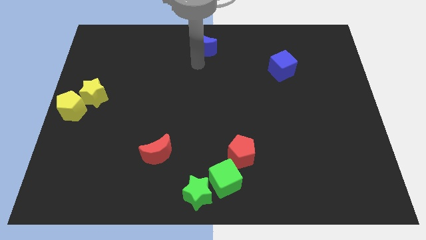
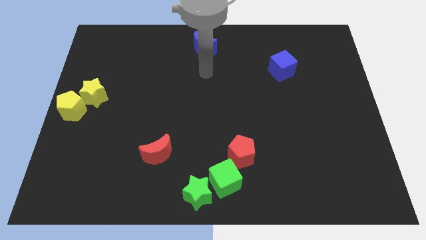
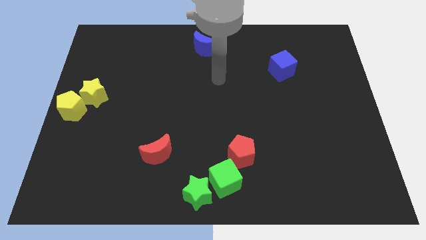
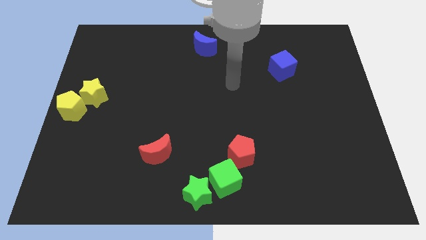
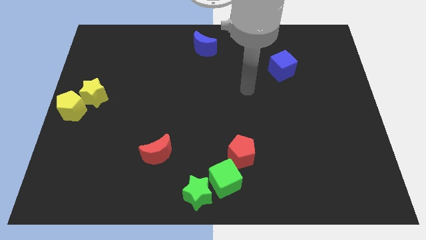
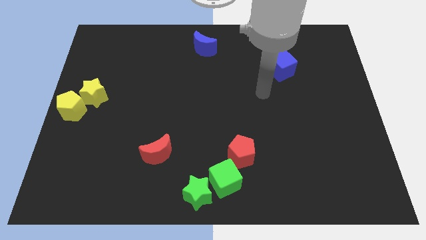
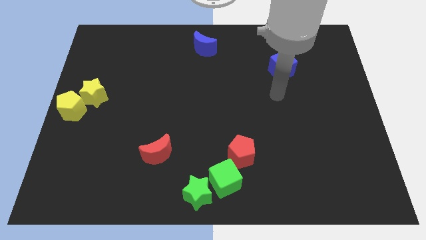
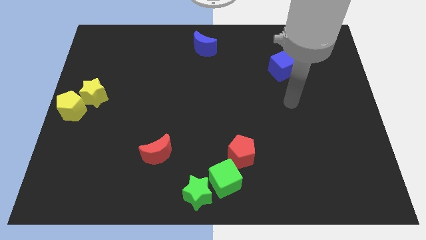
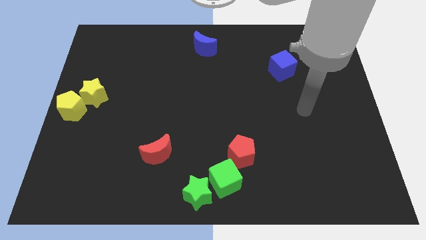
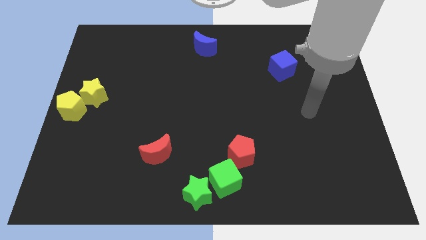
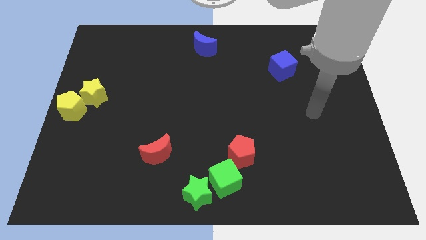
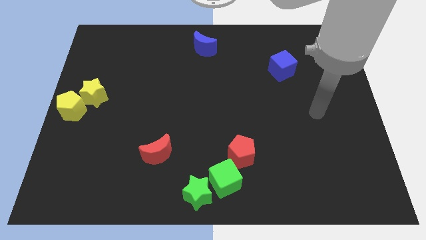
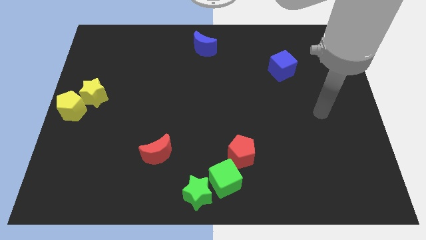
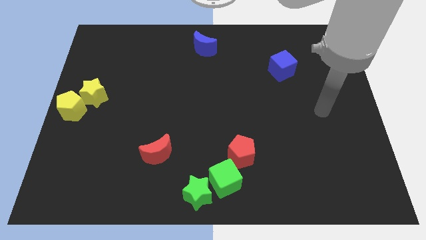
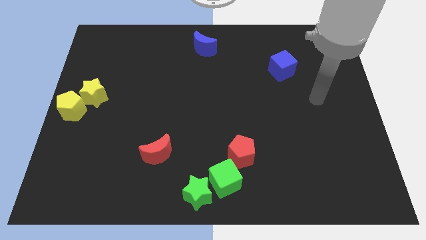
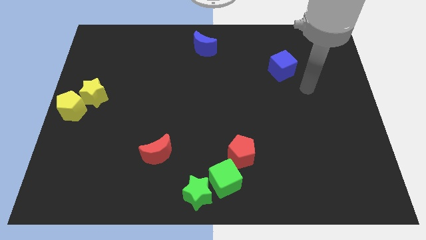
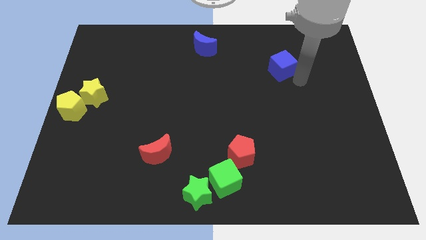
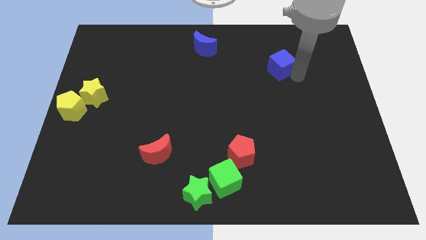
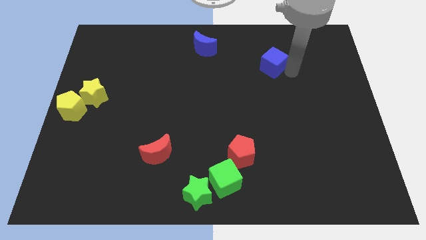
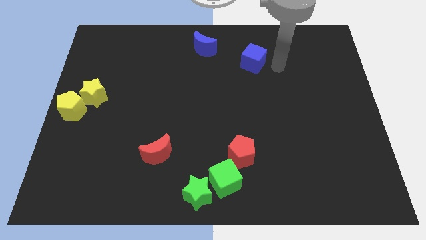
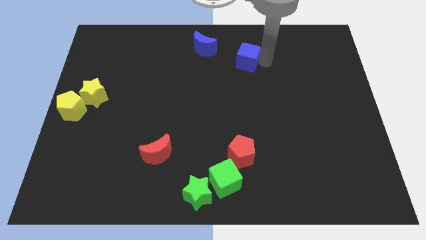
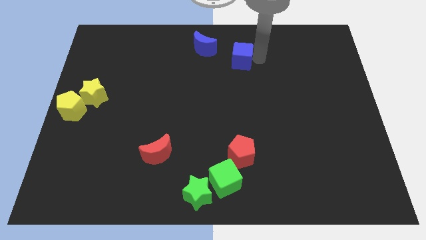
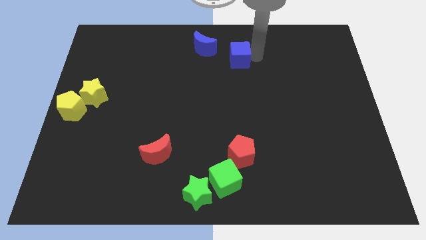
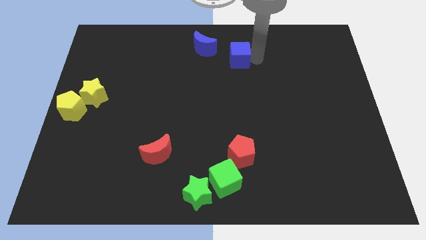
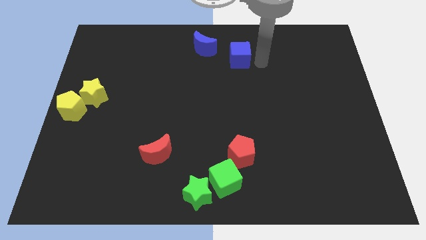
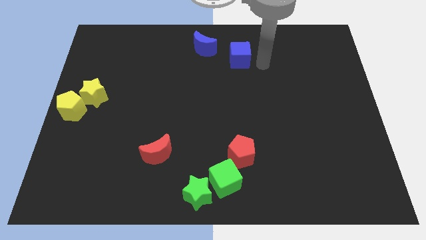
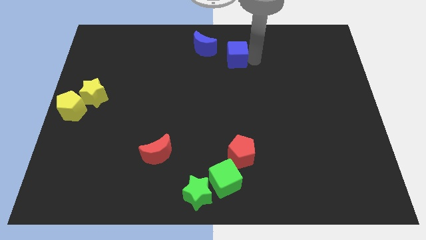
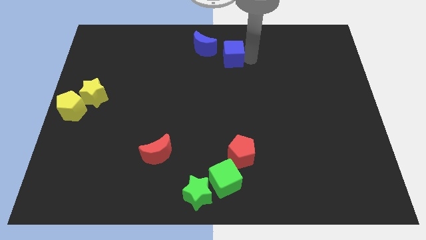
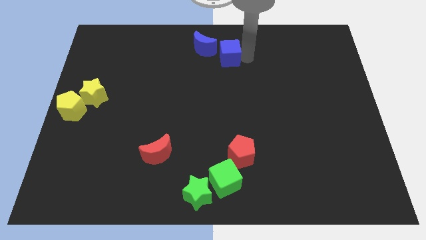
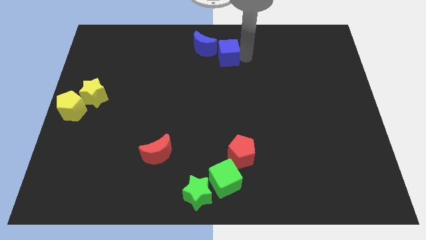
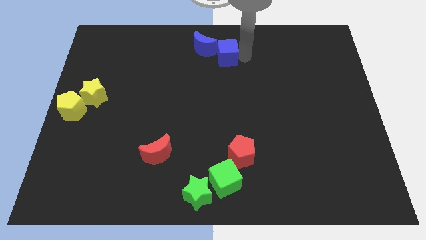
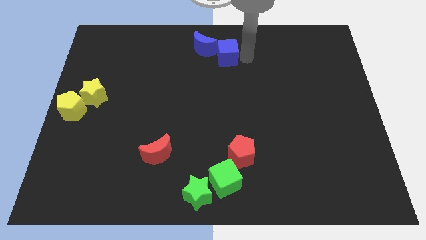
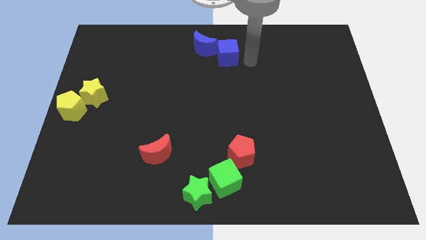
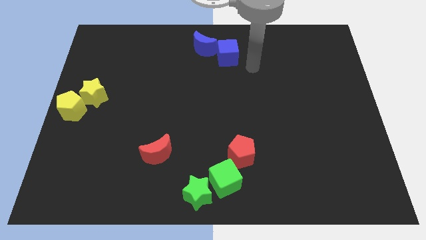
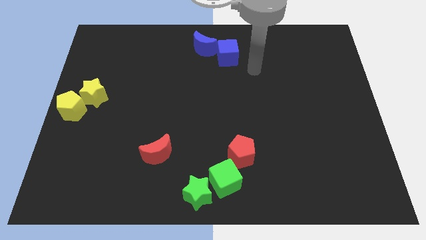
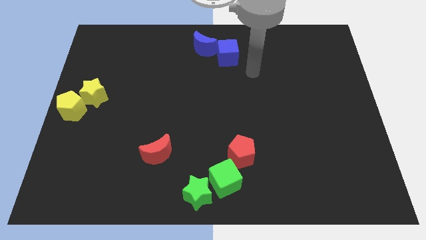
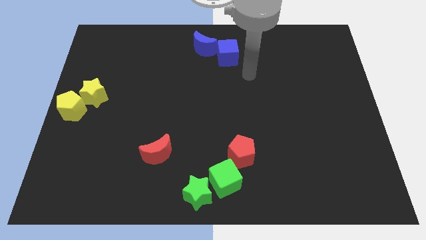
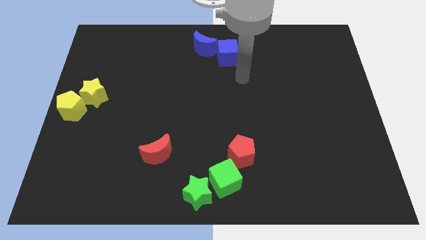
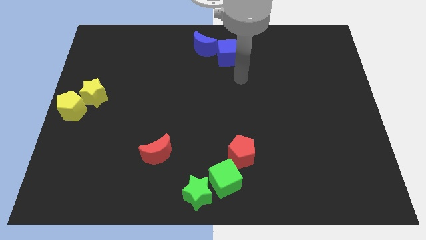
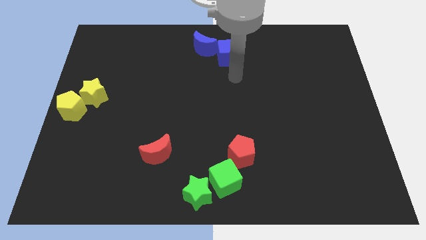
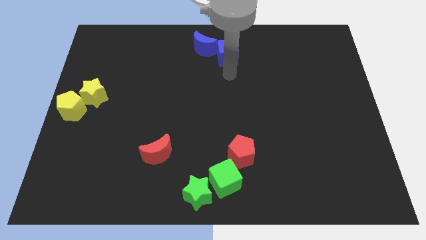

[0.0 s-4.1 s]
drag the blue cube into the right side of the blue crescent

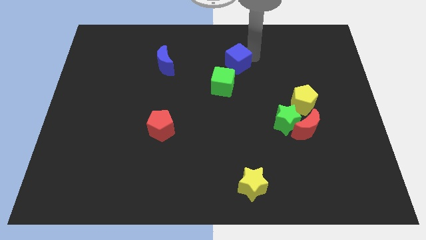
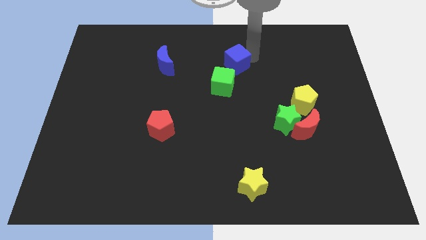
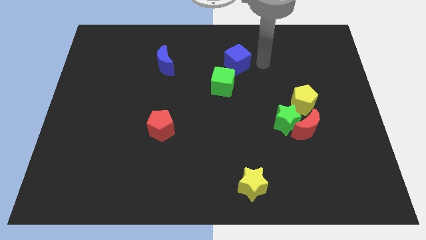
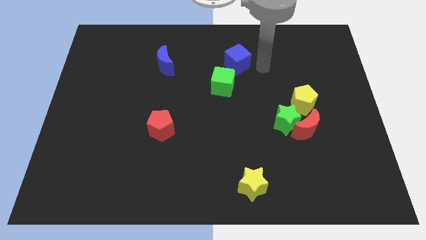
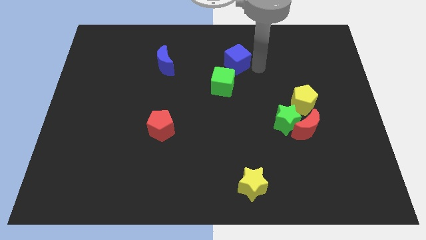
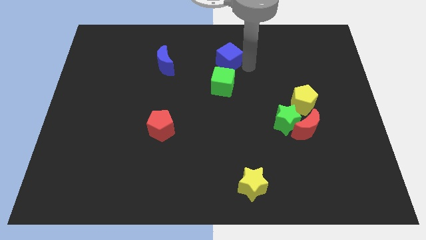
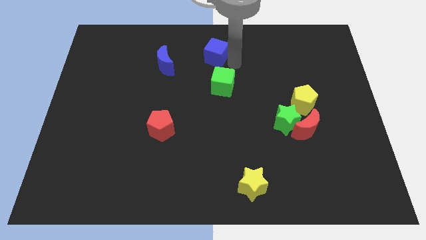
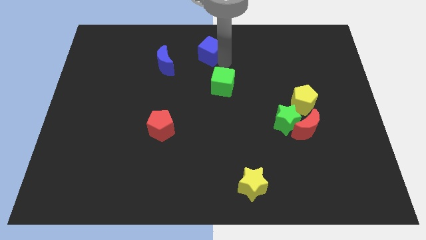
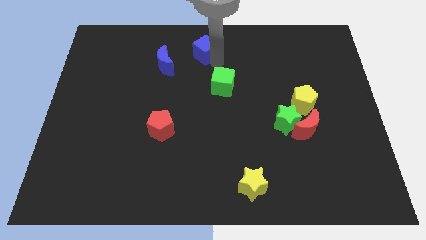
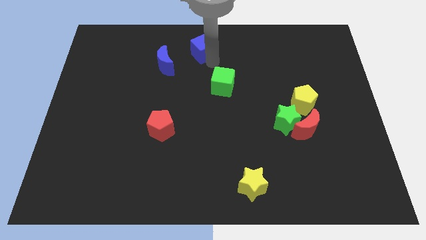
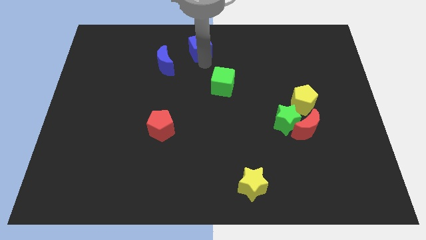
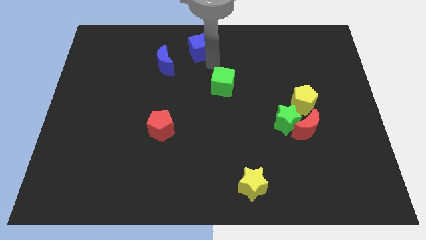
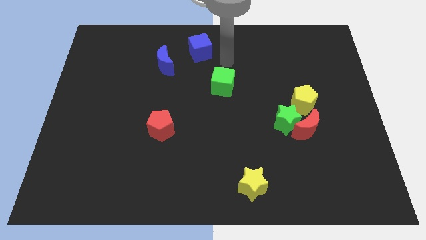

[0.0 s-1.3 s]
move the blue cube towards the blue crescent

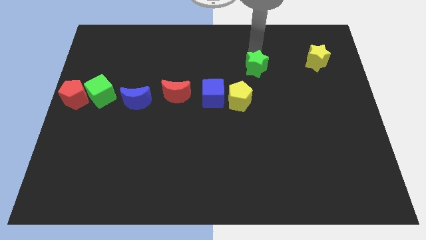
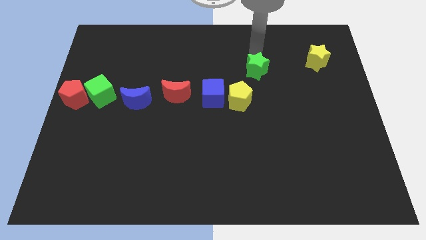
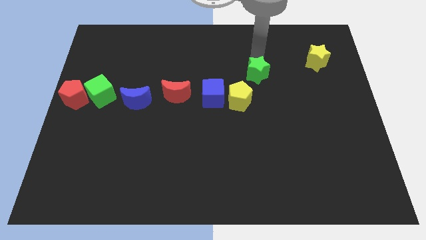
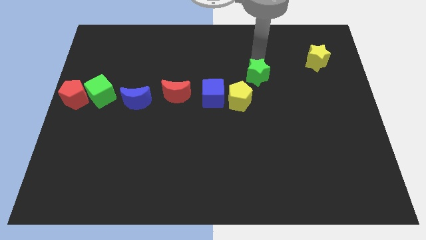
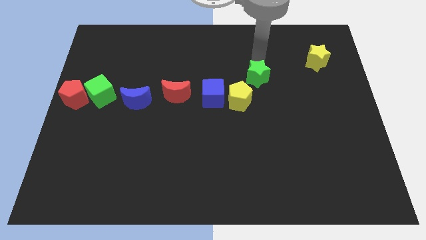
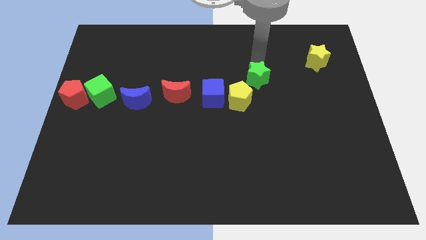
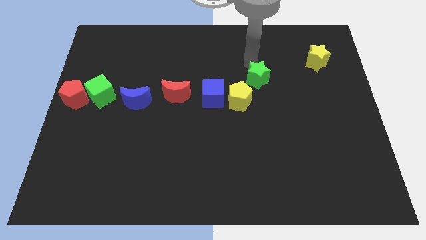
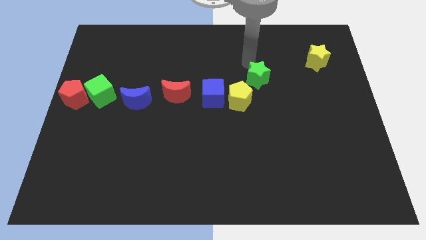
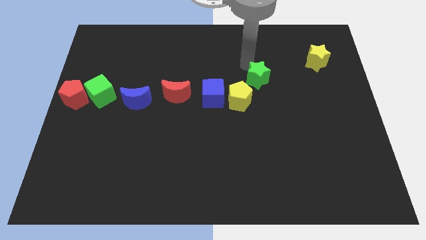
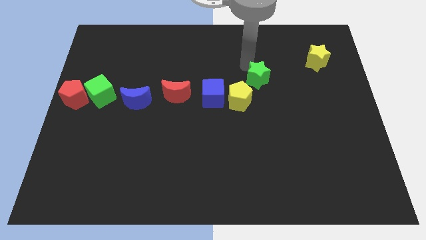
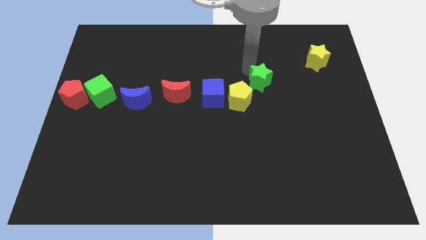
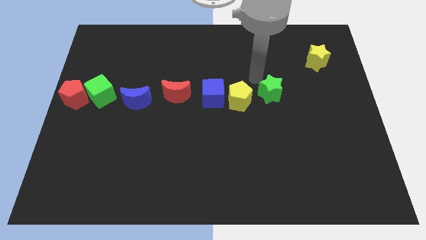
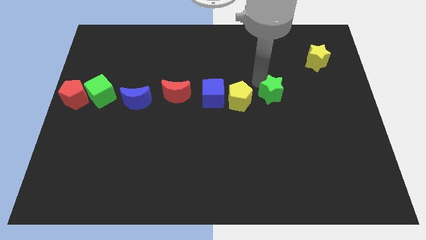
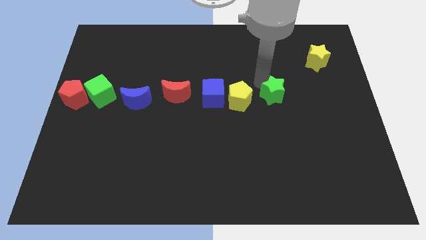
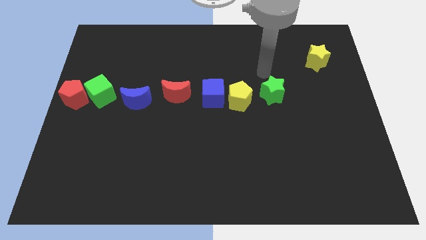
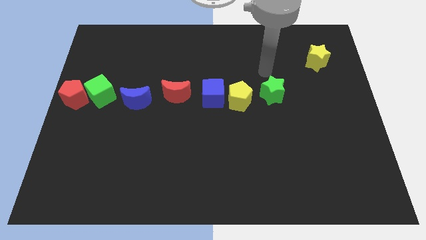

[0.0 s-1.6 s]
place green star beside yellow pentagon

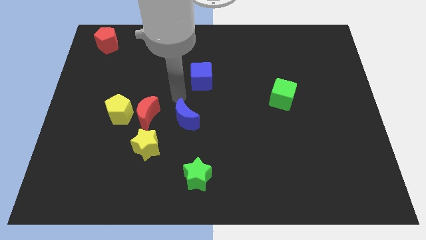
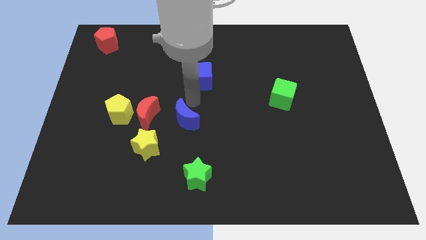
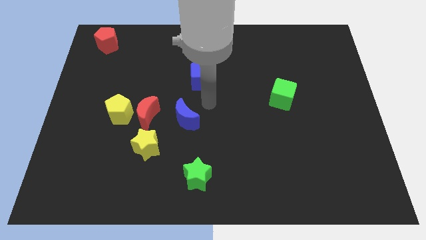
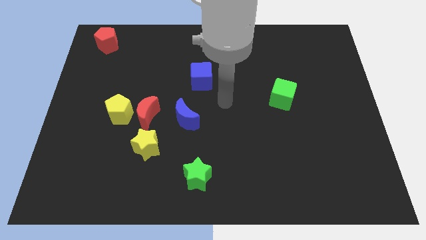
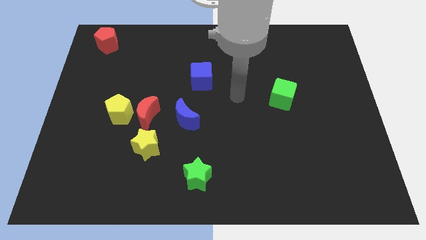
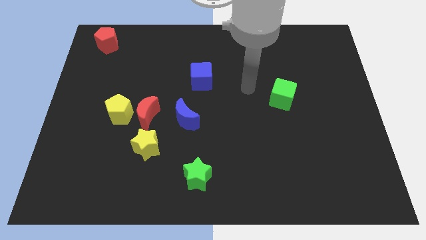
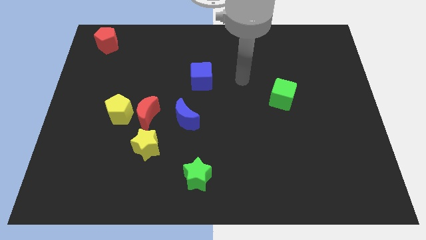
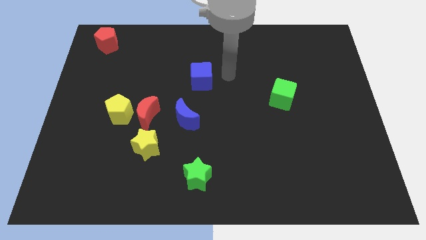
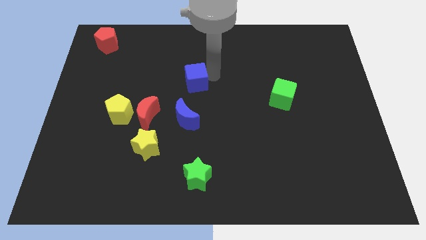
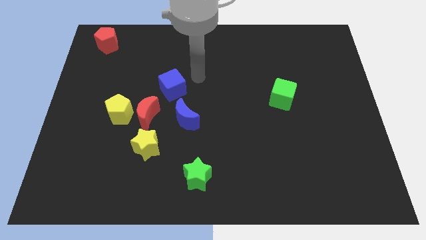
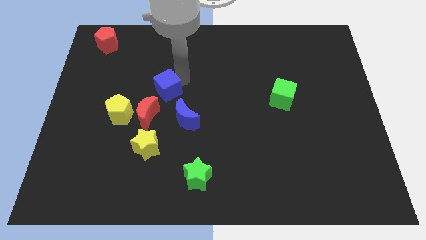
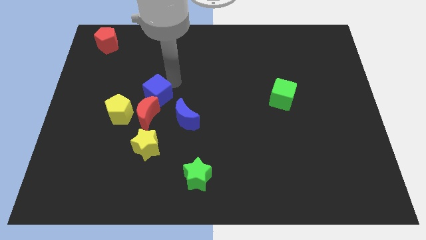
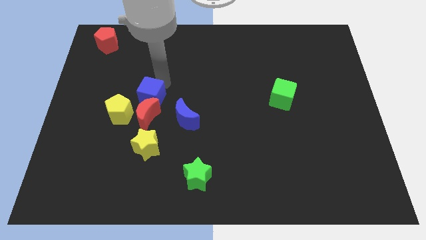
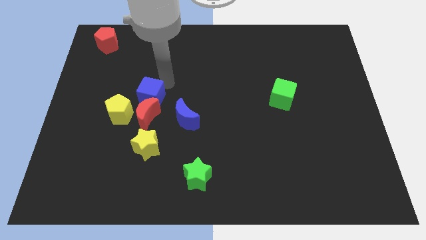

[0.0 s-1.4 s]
push the blue cube into the red moon

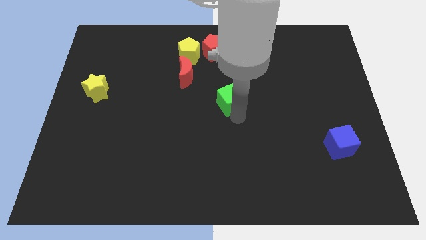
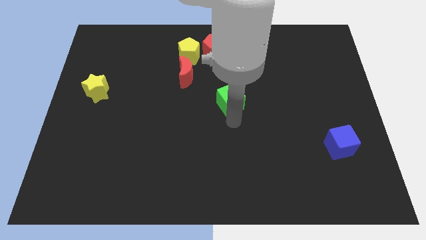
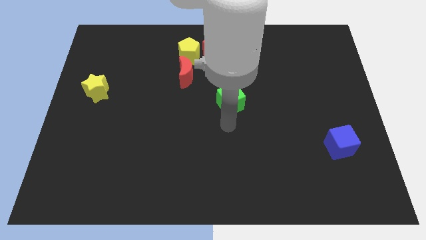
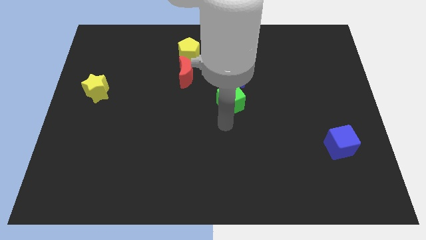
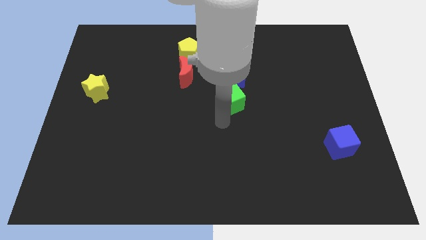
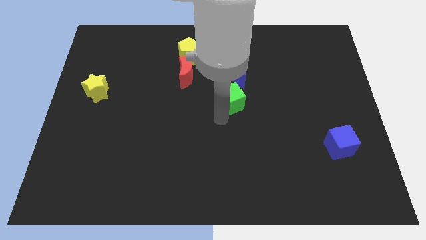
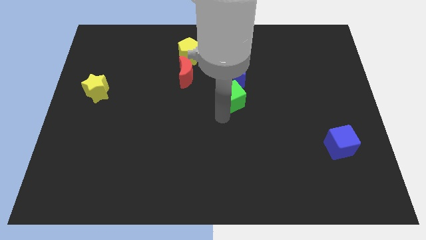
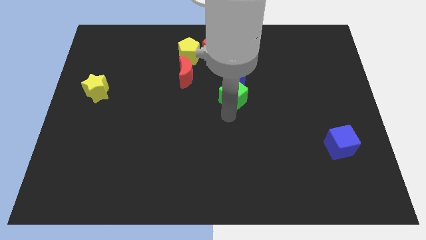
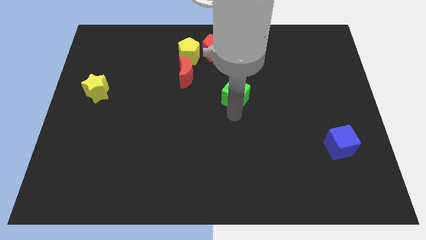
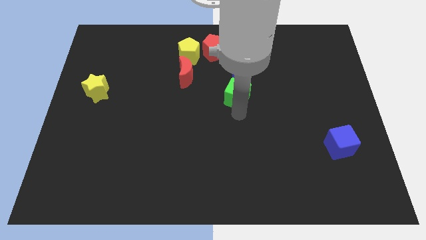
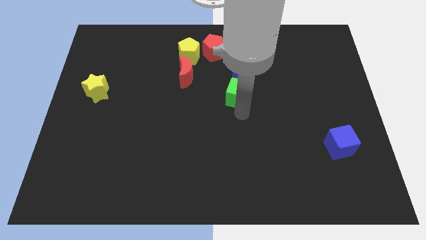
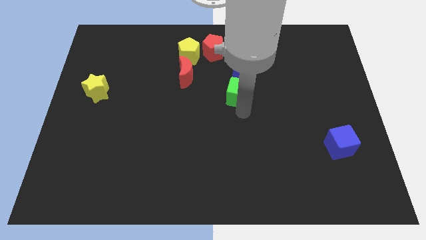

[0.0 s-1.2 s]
slide the green cube to the bottom of the blue moon
